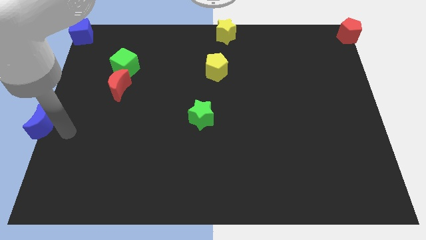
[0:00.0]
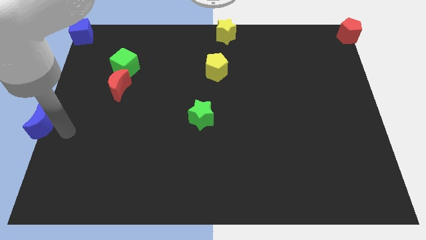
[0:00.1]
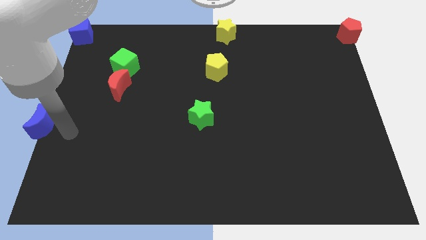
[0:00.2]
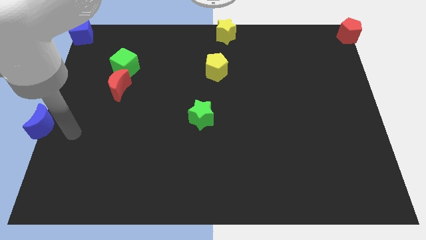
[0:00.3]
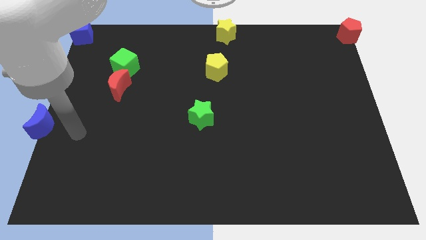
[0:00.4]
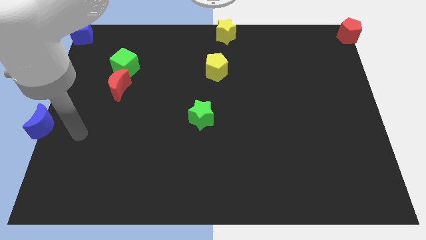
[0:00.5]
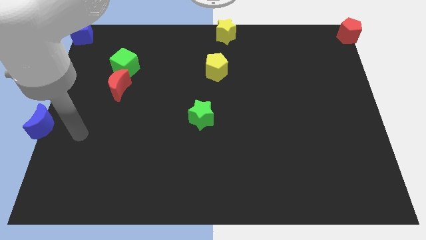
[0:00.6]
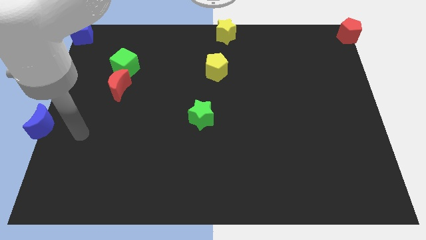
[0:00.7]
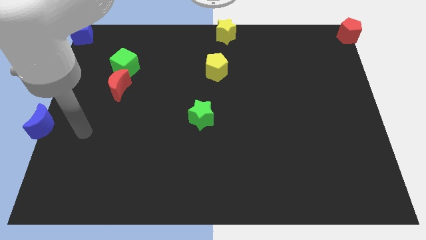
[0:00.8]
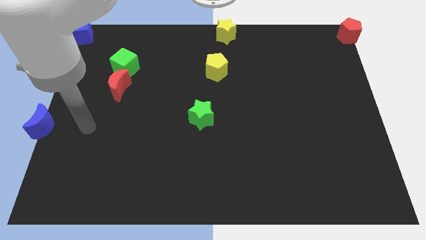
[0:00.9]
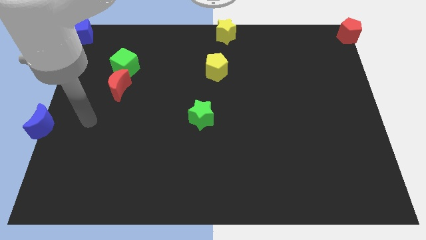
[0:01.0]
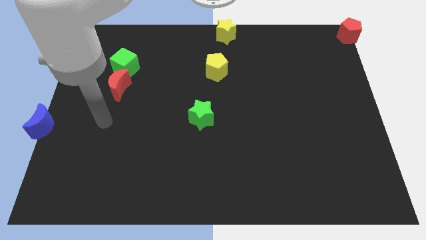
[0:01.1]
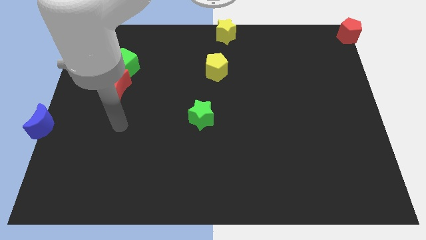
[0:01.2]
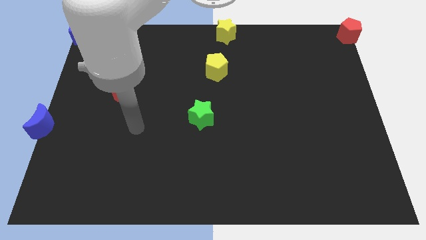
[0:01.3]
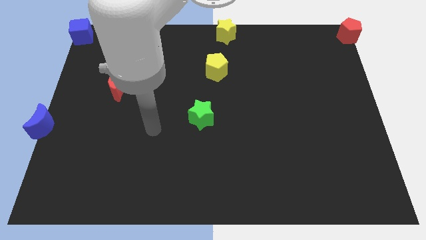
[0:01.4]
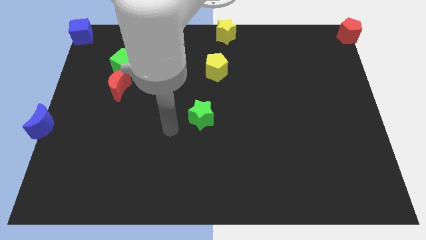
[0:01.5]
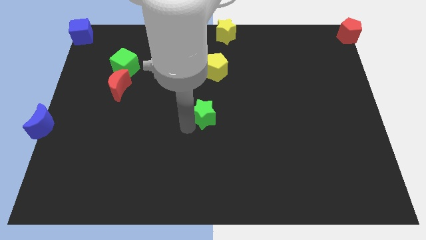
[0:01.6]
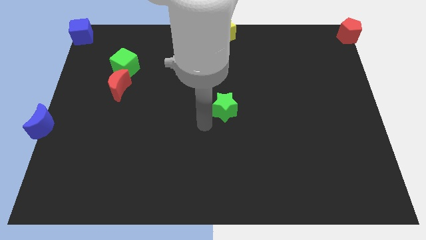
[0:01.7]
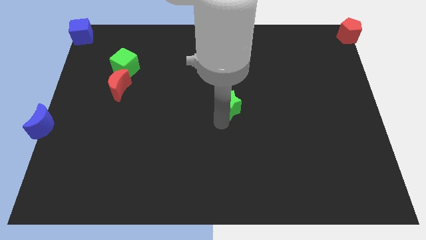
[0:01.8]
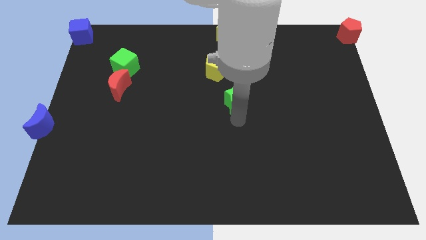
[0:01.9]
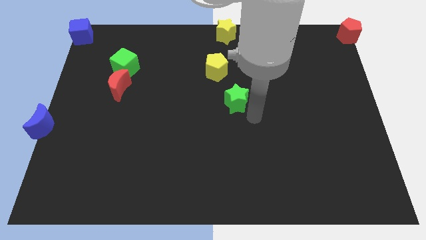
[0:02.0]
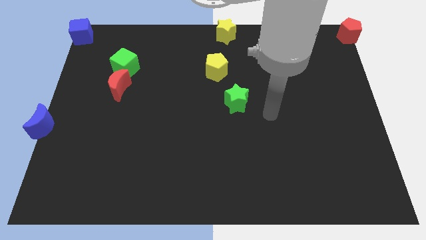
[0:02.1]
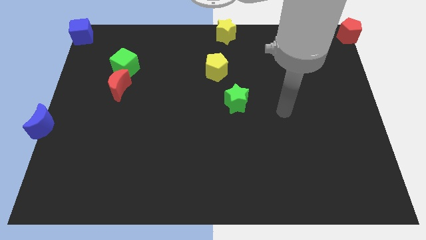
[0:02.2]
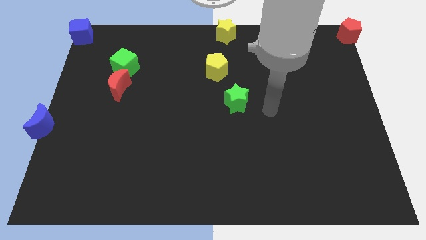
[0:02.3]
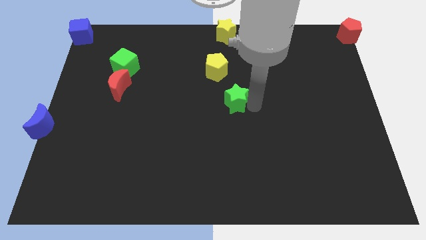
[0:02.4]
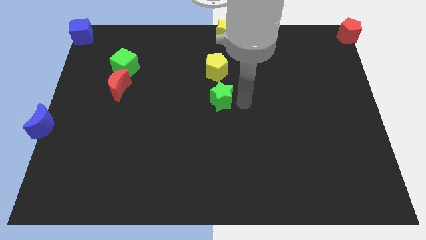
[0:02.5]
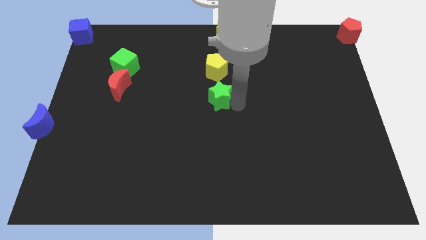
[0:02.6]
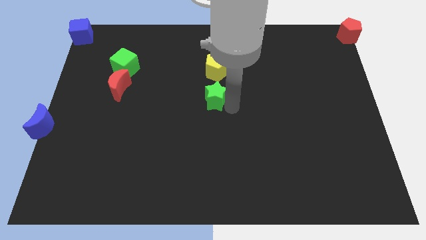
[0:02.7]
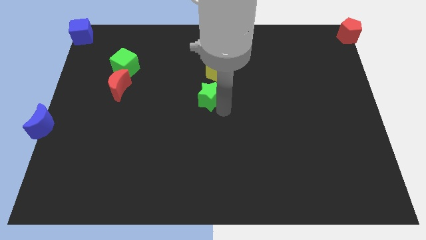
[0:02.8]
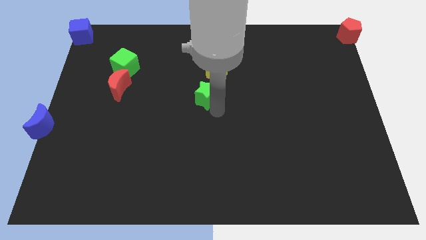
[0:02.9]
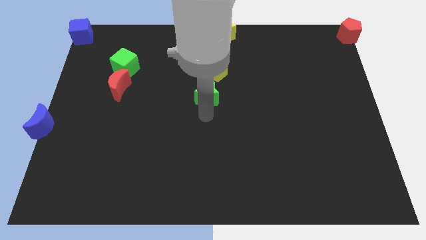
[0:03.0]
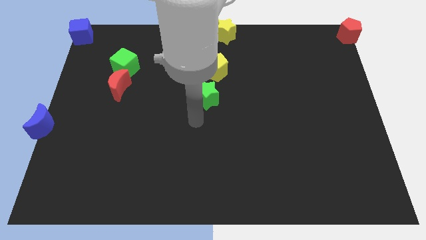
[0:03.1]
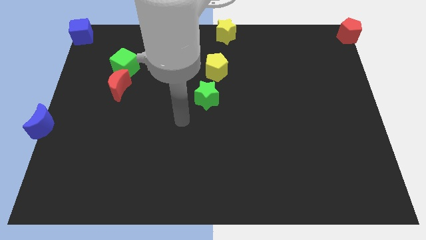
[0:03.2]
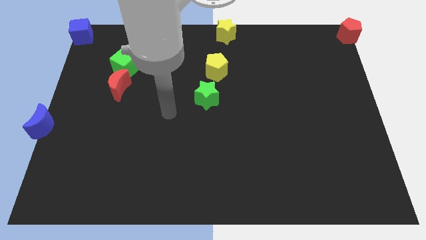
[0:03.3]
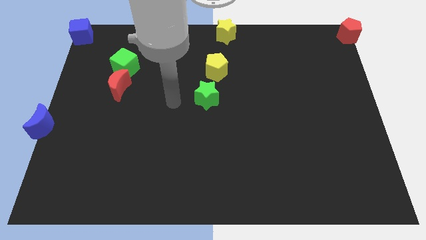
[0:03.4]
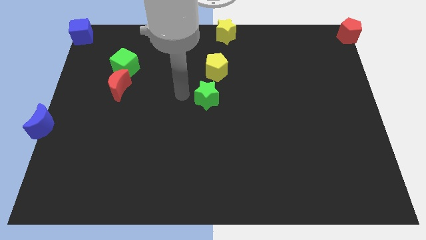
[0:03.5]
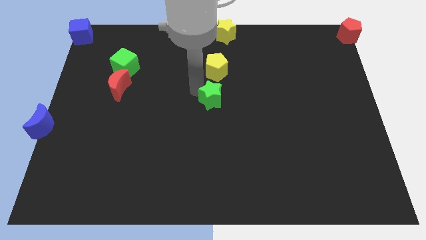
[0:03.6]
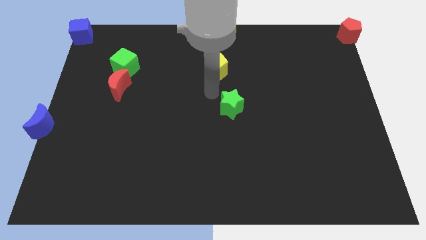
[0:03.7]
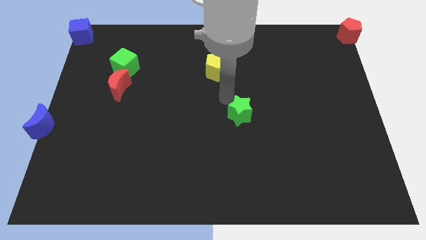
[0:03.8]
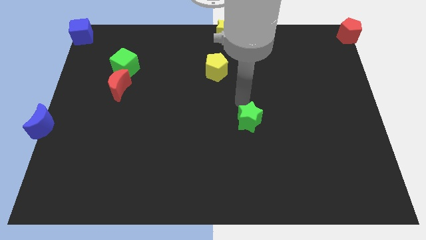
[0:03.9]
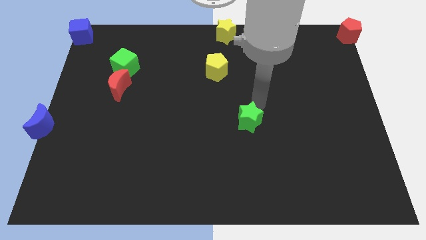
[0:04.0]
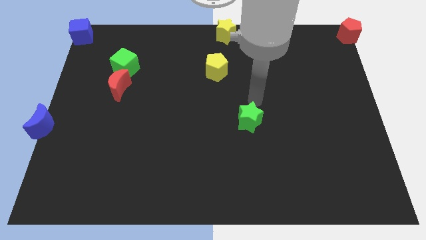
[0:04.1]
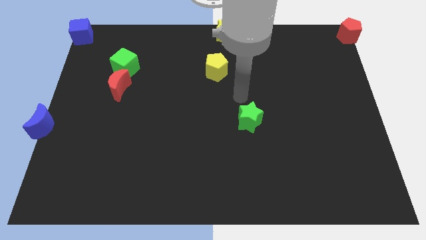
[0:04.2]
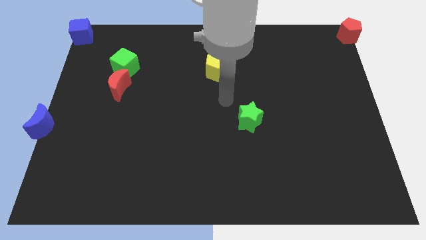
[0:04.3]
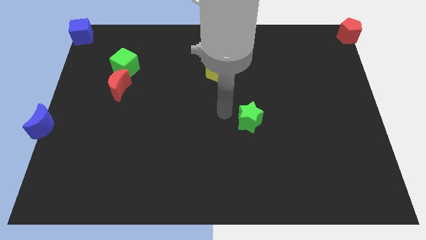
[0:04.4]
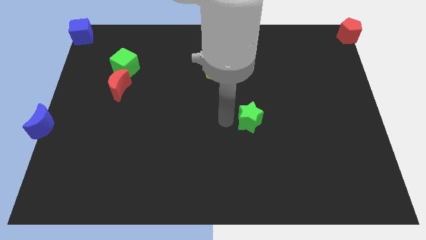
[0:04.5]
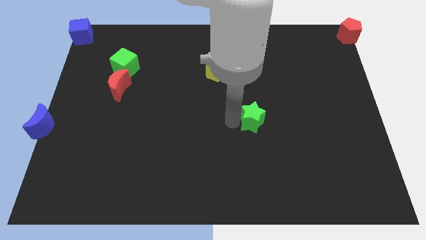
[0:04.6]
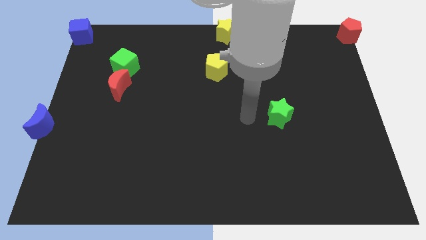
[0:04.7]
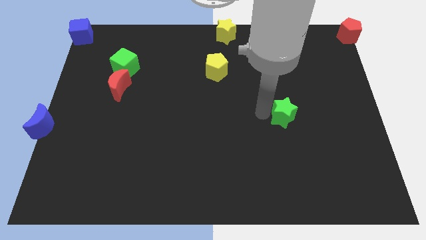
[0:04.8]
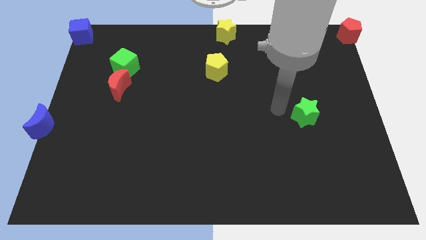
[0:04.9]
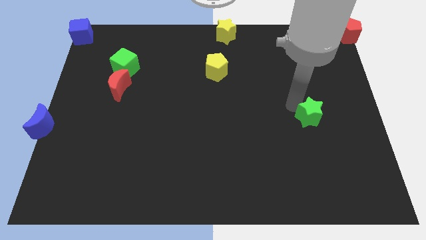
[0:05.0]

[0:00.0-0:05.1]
move the green star diagonally bottom right to the yellow pentagon

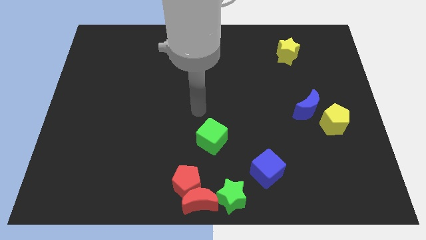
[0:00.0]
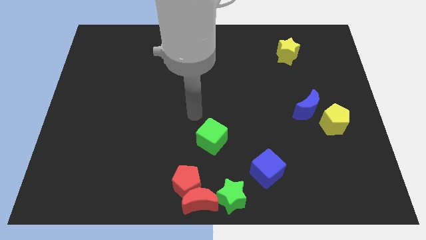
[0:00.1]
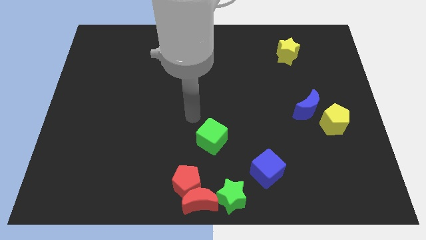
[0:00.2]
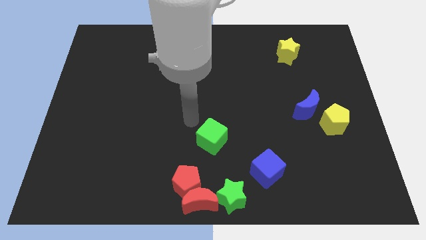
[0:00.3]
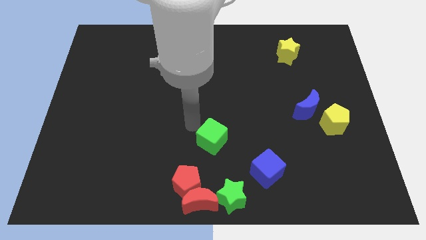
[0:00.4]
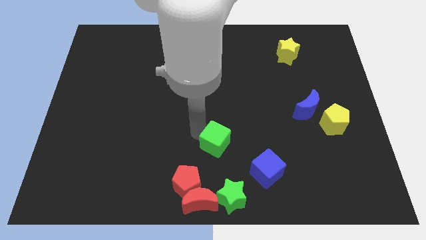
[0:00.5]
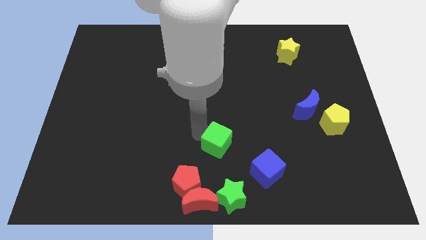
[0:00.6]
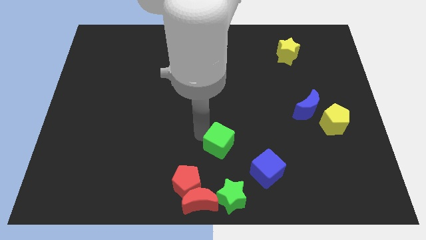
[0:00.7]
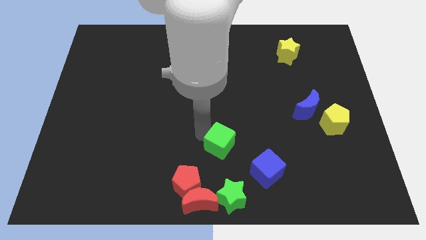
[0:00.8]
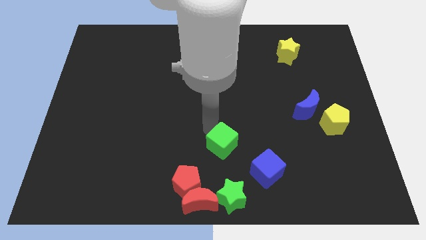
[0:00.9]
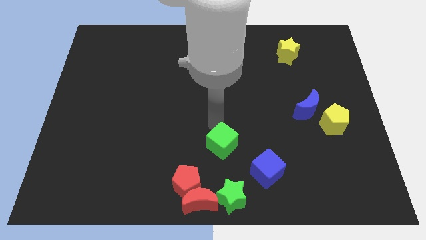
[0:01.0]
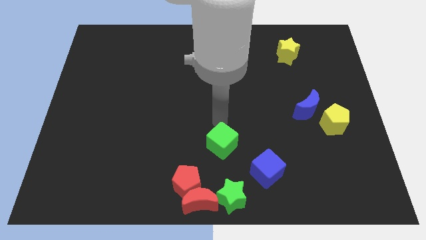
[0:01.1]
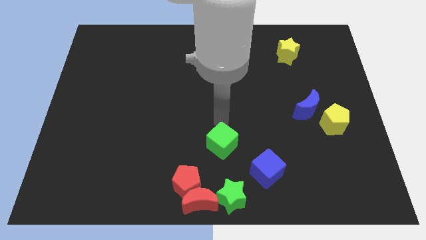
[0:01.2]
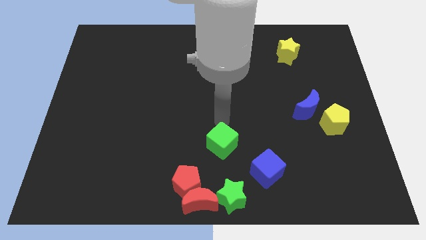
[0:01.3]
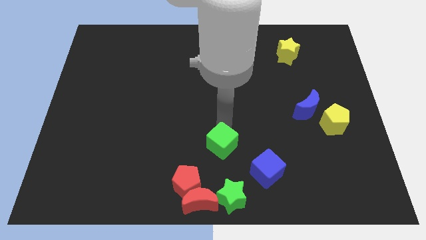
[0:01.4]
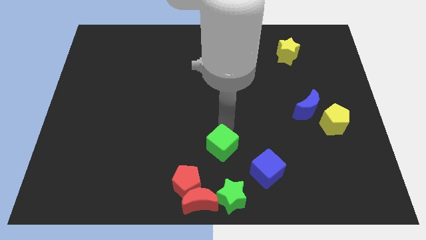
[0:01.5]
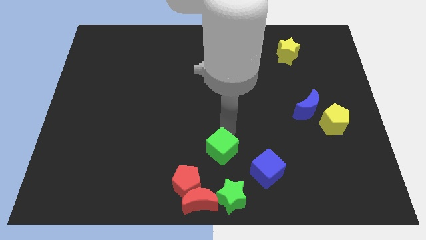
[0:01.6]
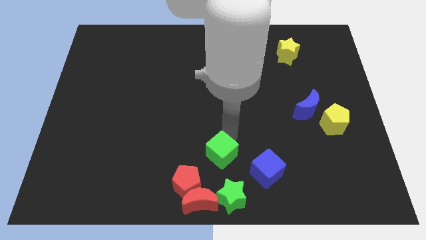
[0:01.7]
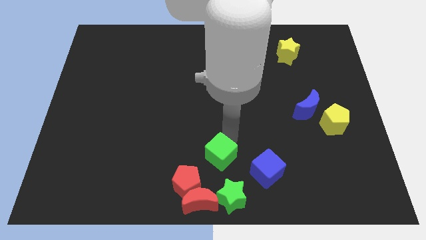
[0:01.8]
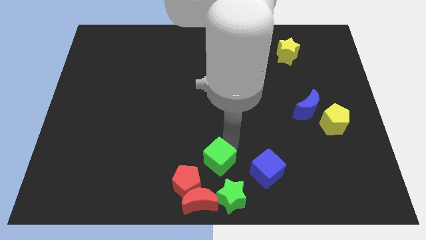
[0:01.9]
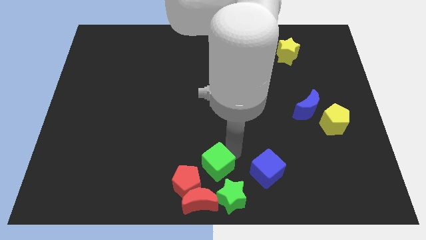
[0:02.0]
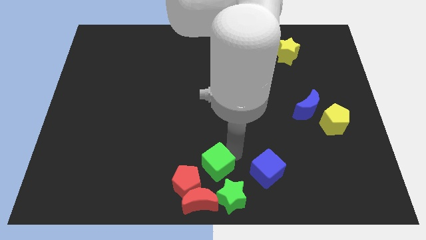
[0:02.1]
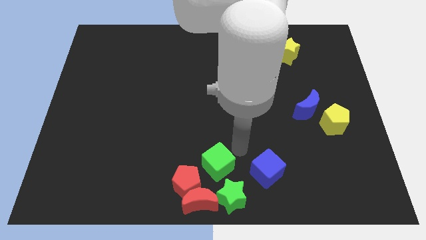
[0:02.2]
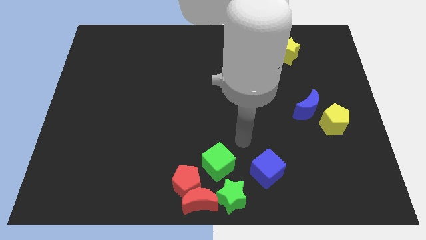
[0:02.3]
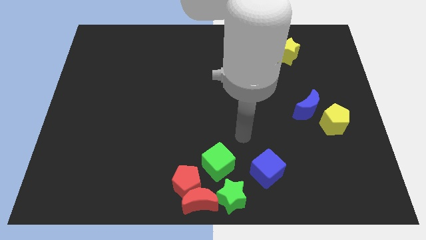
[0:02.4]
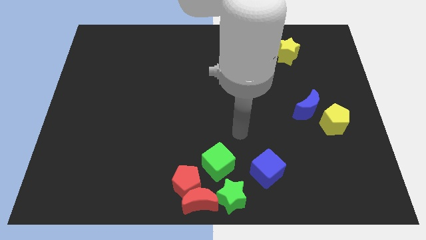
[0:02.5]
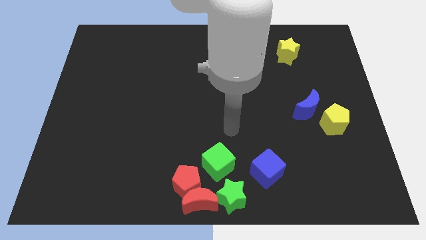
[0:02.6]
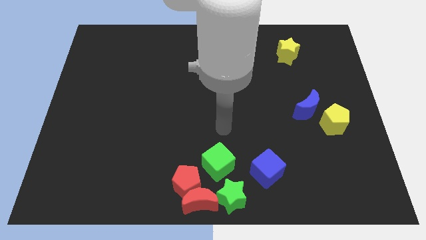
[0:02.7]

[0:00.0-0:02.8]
push the green cube towards green star

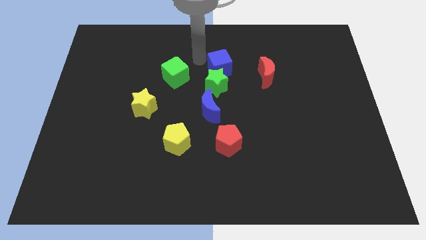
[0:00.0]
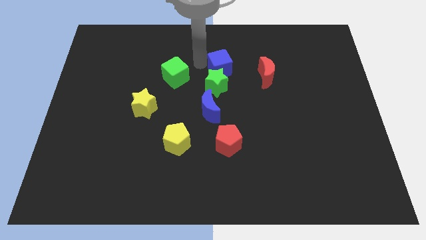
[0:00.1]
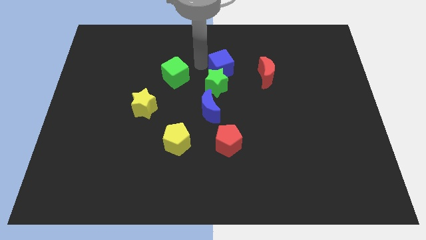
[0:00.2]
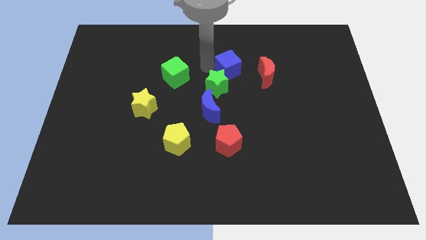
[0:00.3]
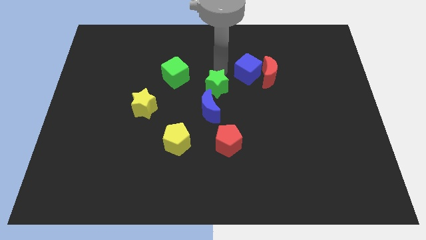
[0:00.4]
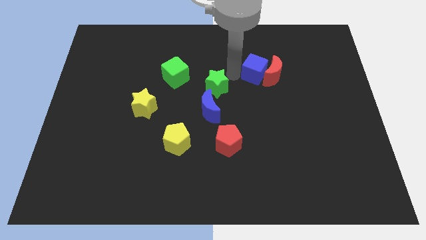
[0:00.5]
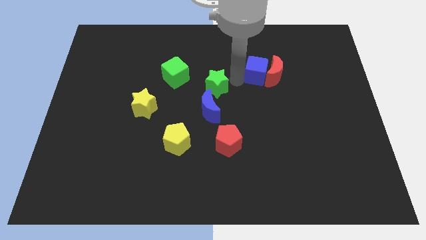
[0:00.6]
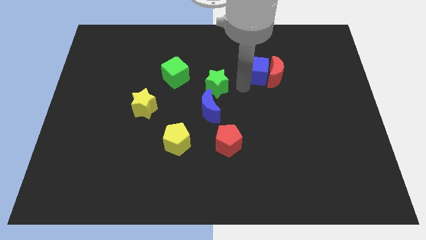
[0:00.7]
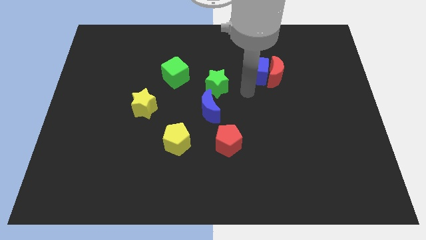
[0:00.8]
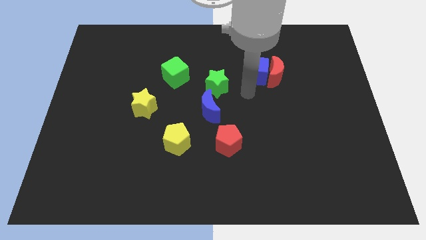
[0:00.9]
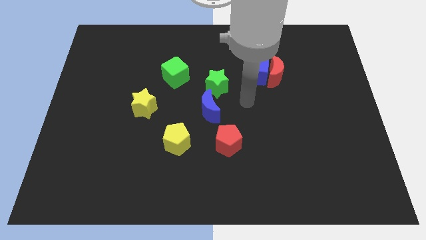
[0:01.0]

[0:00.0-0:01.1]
place blue cube to the left side of the red crescent

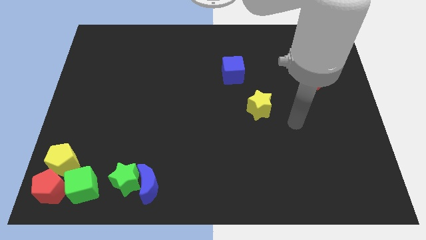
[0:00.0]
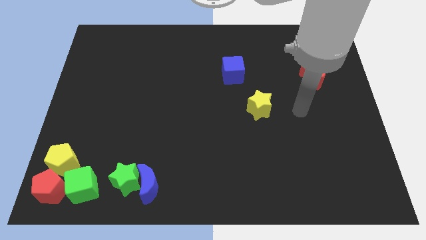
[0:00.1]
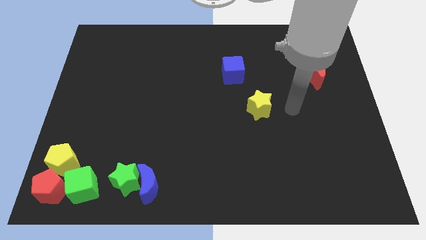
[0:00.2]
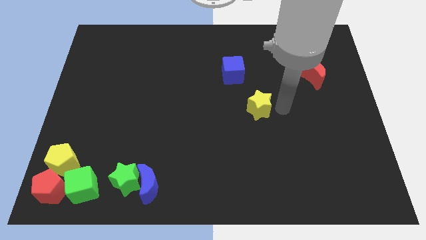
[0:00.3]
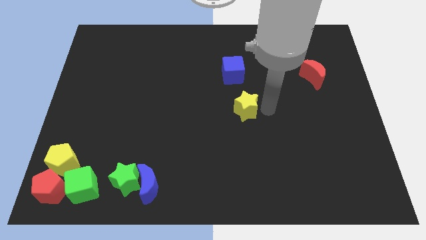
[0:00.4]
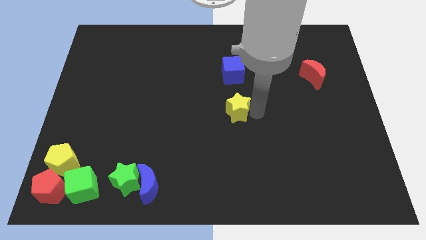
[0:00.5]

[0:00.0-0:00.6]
move the yellow star below the blue cube
